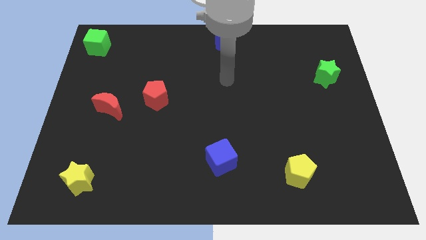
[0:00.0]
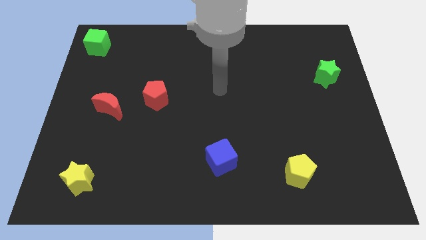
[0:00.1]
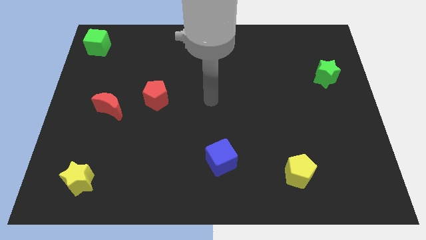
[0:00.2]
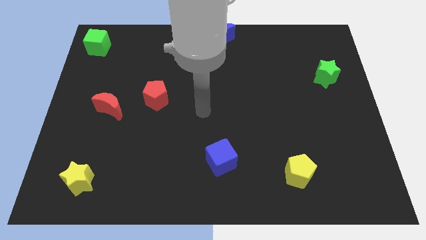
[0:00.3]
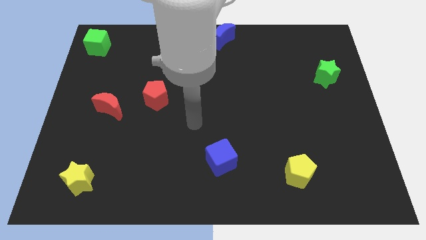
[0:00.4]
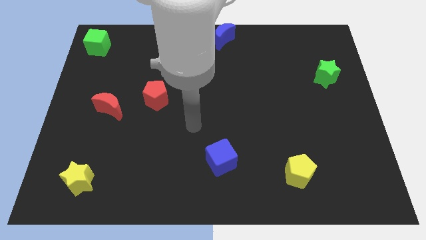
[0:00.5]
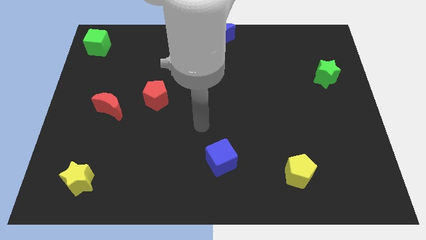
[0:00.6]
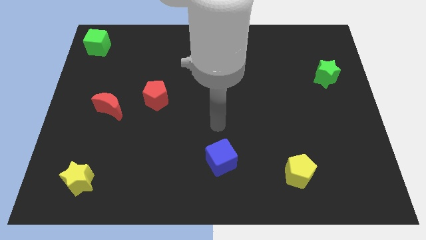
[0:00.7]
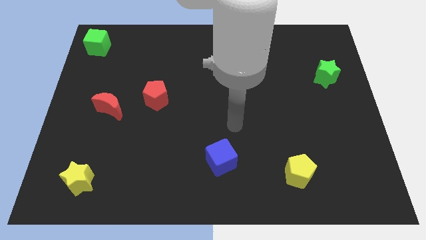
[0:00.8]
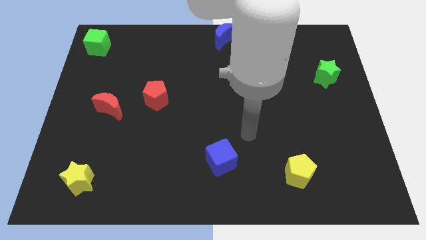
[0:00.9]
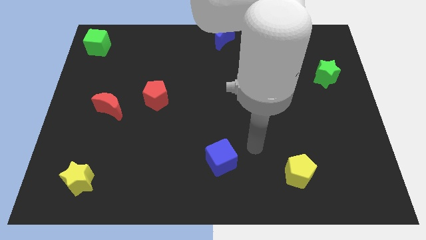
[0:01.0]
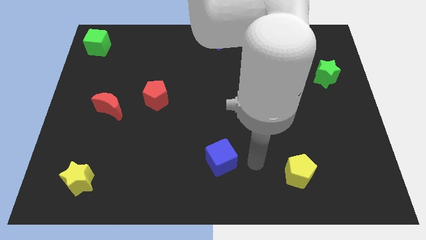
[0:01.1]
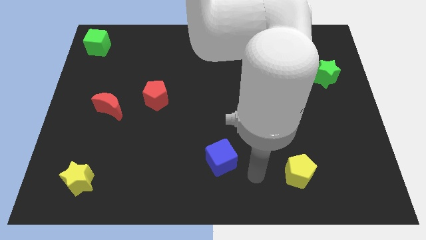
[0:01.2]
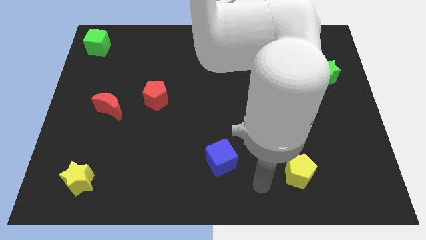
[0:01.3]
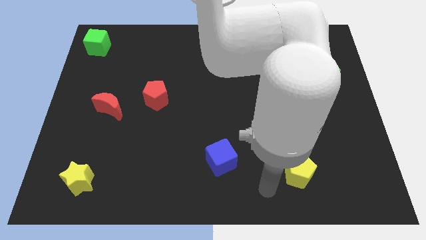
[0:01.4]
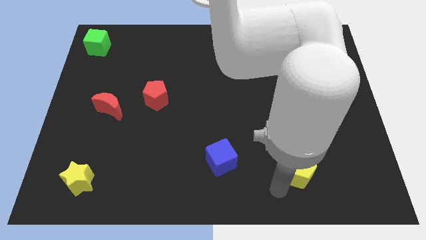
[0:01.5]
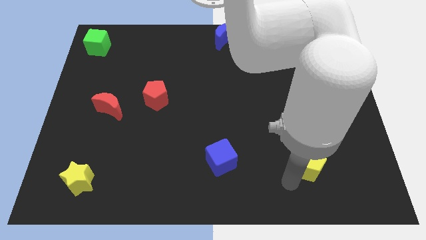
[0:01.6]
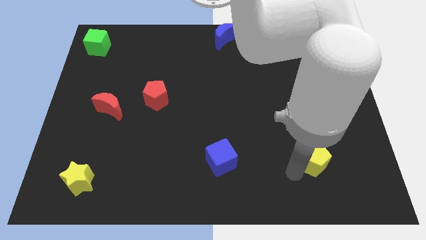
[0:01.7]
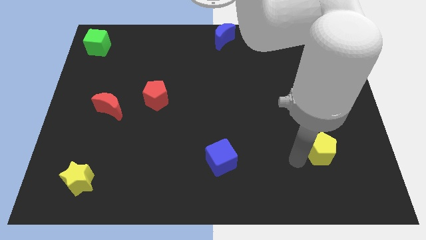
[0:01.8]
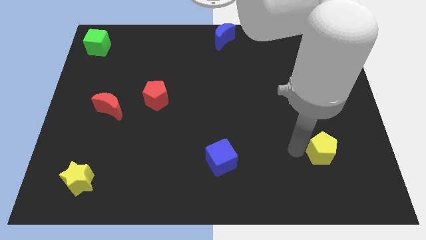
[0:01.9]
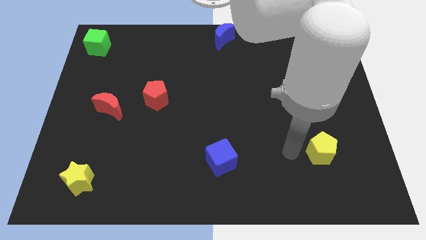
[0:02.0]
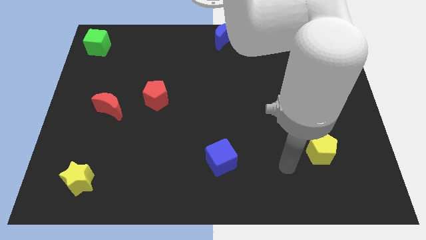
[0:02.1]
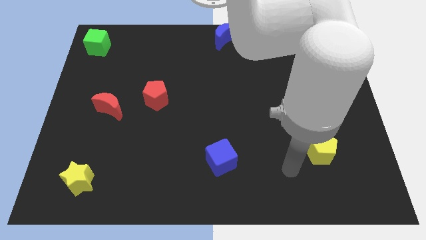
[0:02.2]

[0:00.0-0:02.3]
move yellow pentagon slightly upwards

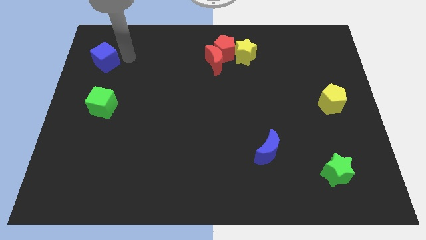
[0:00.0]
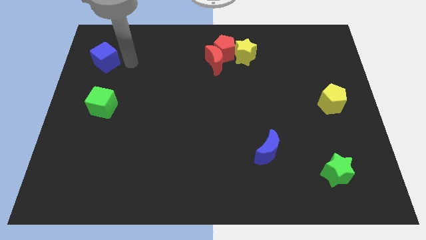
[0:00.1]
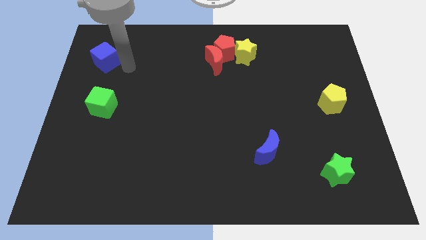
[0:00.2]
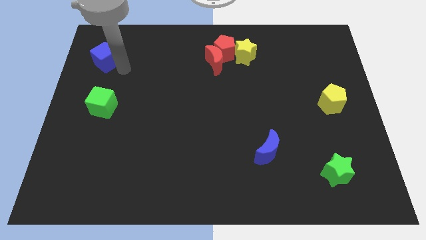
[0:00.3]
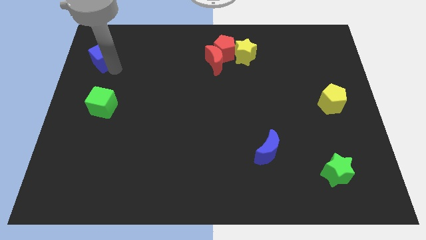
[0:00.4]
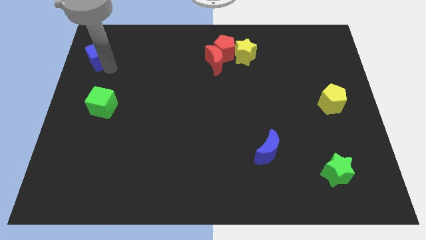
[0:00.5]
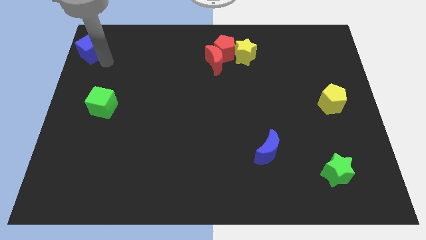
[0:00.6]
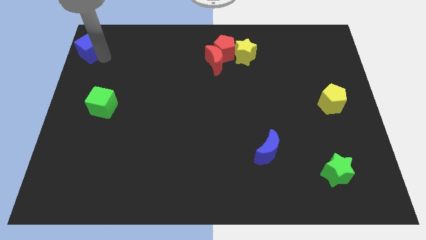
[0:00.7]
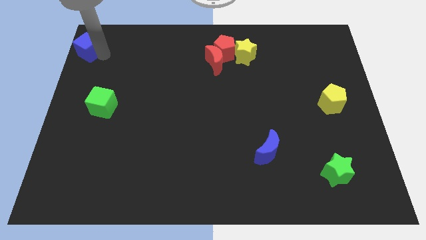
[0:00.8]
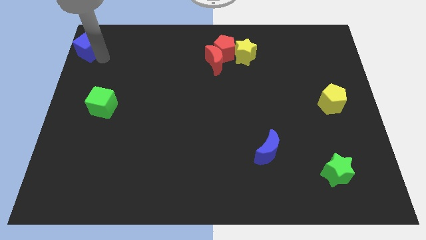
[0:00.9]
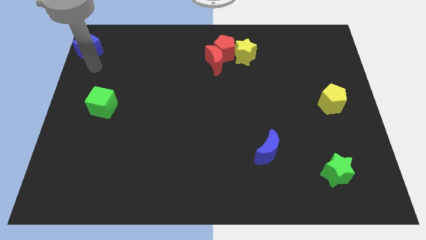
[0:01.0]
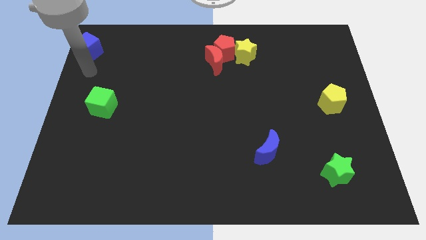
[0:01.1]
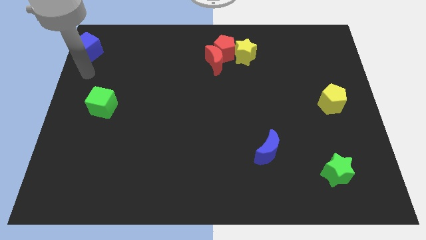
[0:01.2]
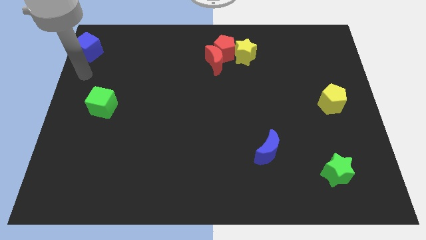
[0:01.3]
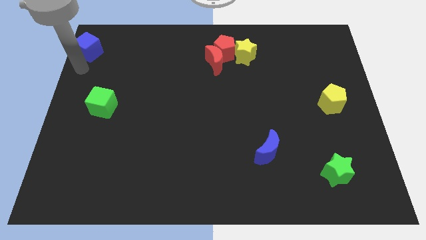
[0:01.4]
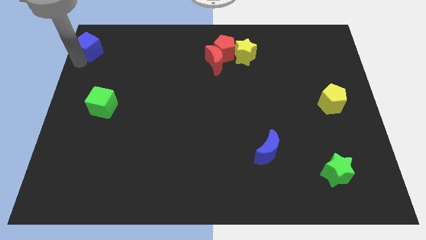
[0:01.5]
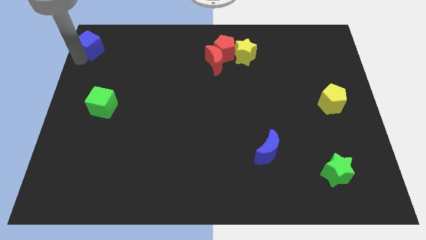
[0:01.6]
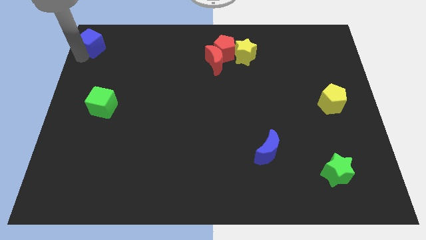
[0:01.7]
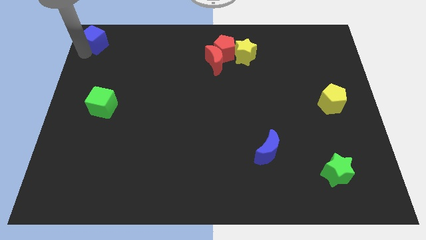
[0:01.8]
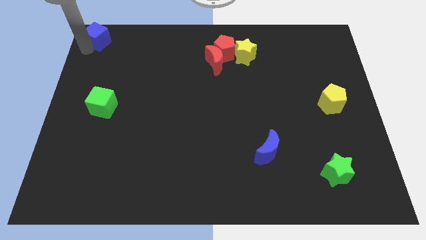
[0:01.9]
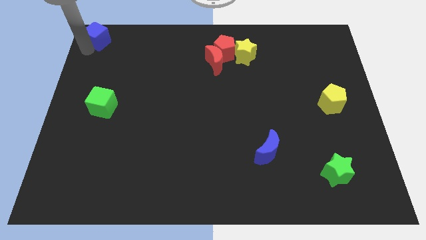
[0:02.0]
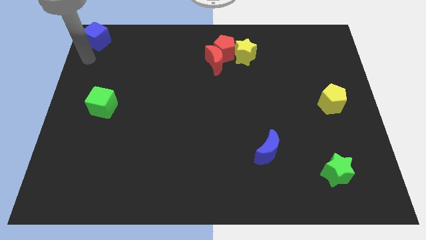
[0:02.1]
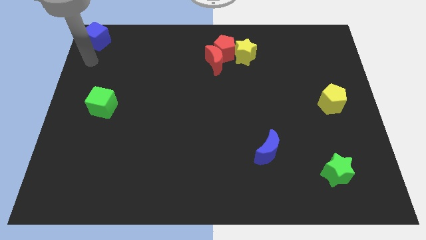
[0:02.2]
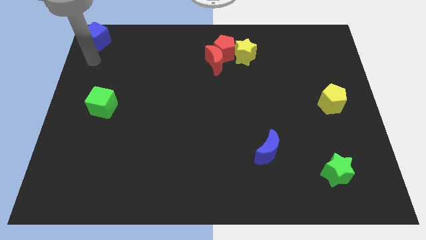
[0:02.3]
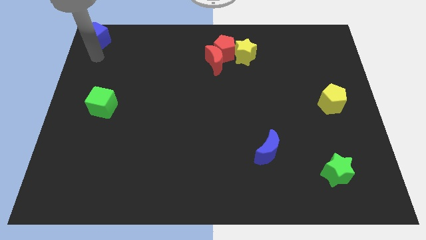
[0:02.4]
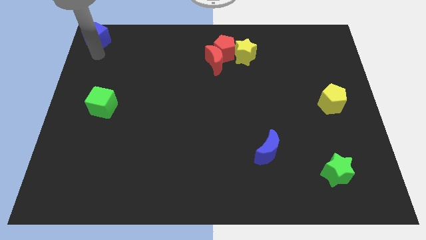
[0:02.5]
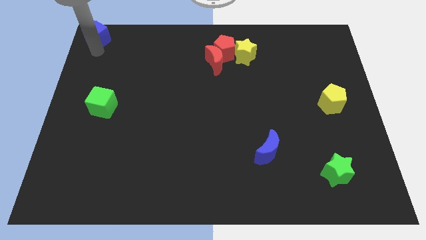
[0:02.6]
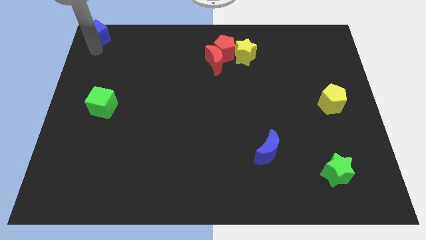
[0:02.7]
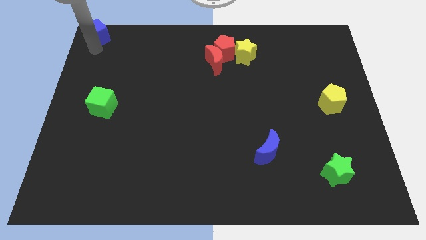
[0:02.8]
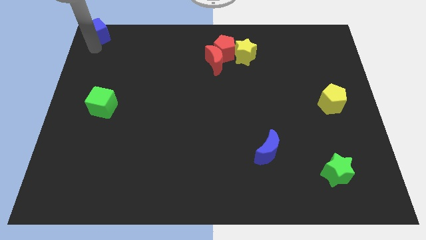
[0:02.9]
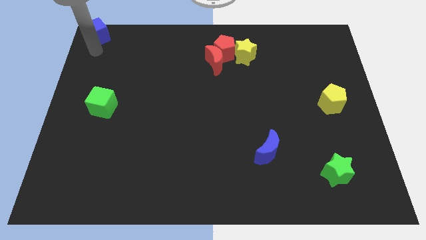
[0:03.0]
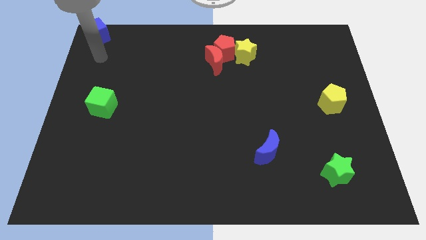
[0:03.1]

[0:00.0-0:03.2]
slide the blue cube at the top left corner

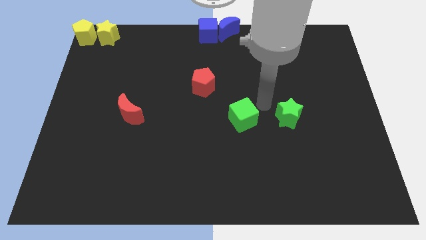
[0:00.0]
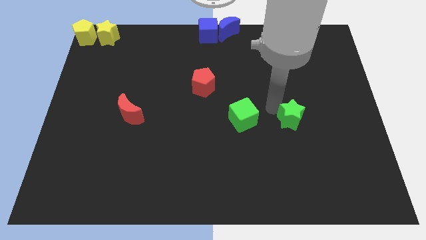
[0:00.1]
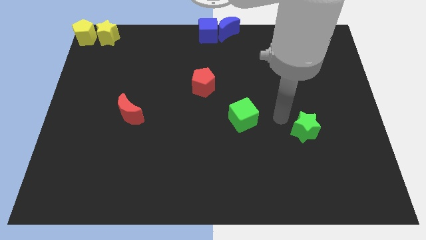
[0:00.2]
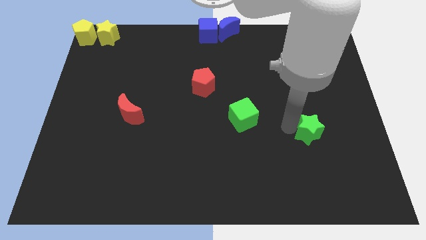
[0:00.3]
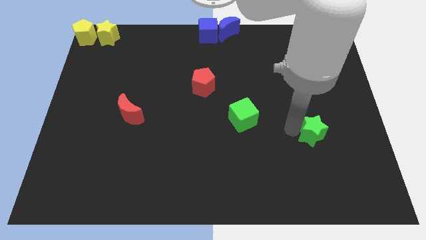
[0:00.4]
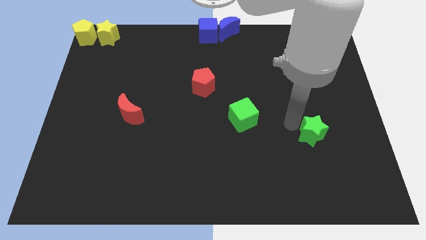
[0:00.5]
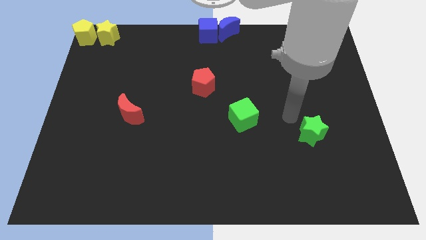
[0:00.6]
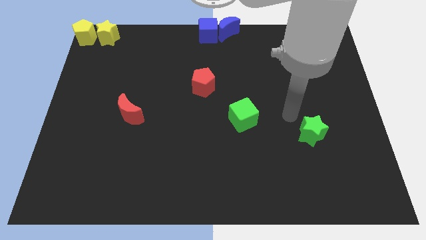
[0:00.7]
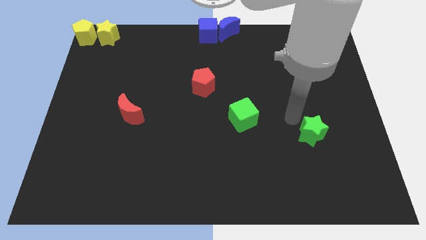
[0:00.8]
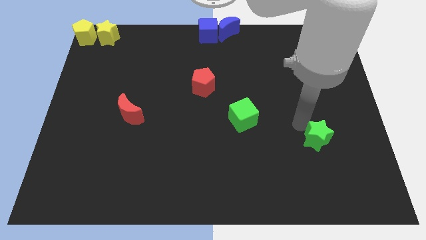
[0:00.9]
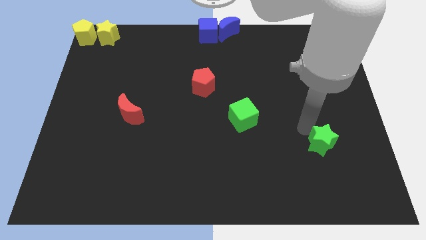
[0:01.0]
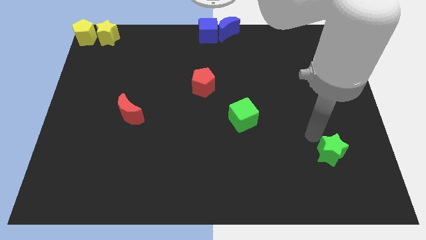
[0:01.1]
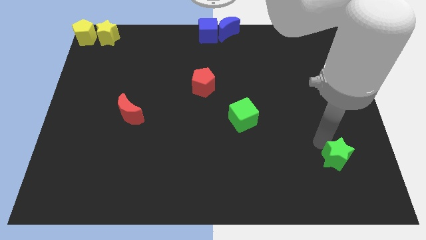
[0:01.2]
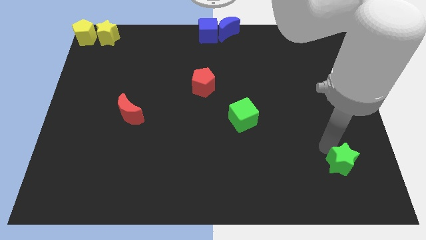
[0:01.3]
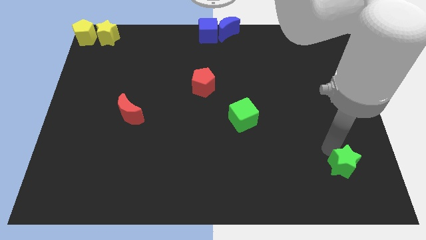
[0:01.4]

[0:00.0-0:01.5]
drag the green star towards the bottom right side of the board

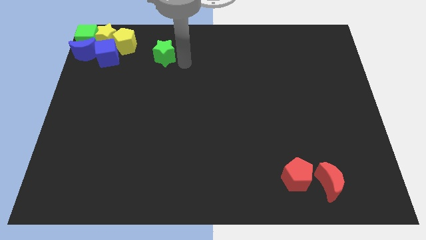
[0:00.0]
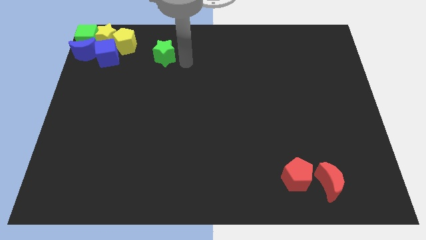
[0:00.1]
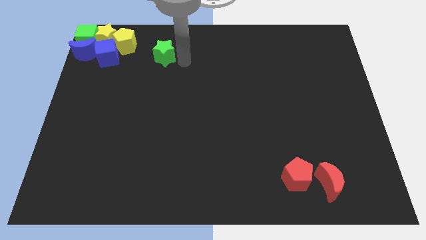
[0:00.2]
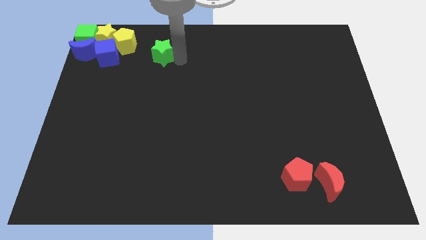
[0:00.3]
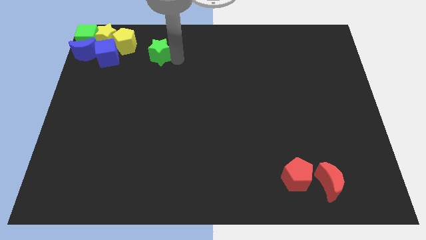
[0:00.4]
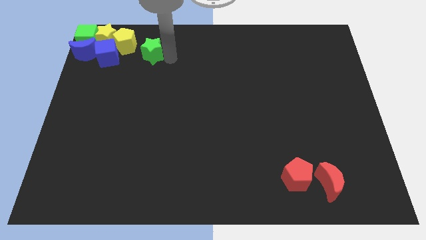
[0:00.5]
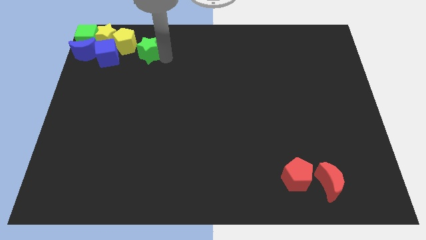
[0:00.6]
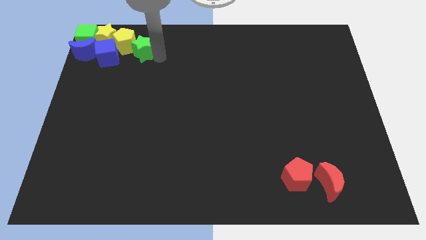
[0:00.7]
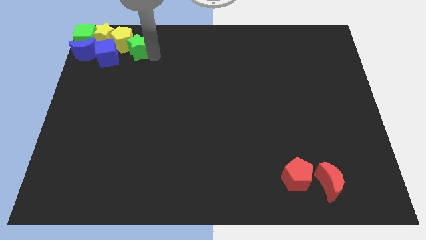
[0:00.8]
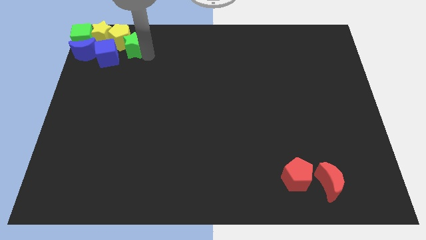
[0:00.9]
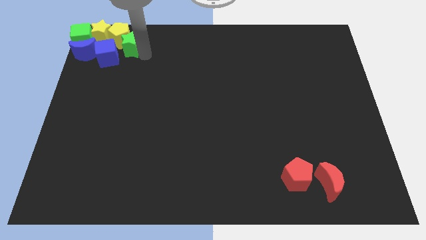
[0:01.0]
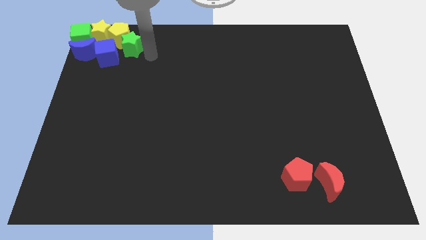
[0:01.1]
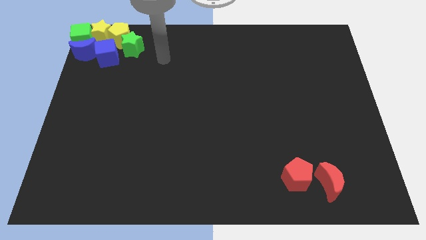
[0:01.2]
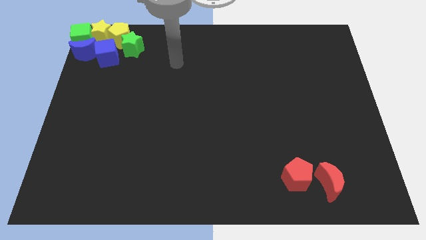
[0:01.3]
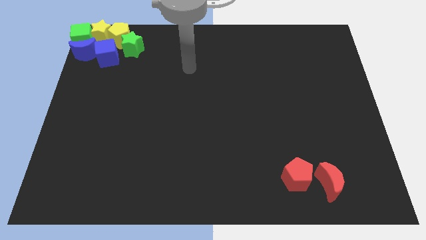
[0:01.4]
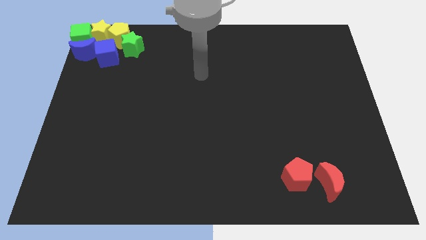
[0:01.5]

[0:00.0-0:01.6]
push the green star under the yellow pentagon

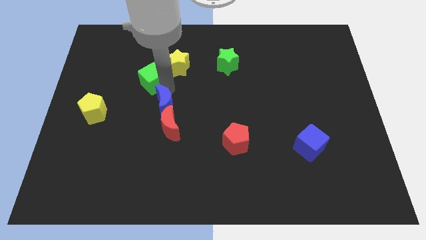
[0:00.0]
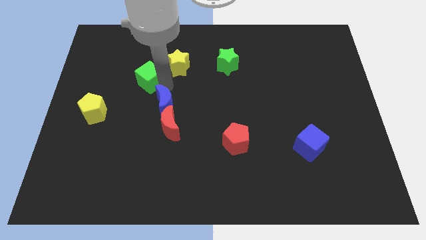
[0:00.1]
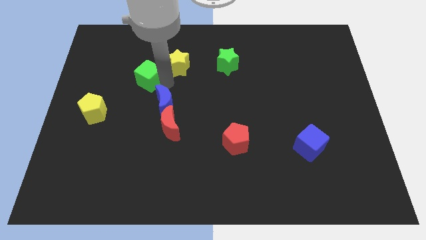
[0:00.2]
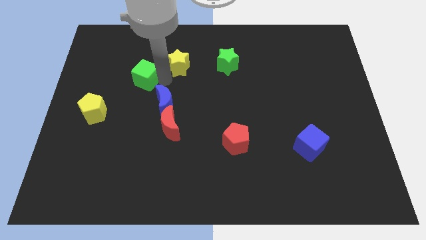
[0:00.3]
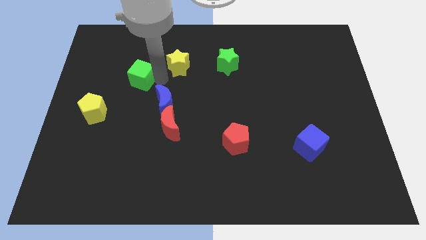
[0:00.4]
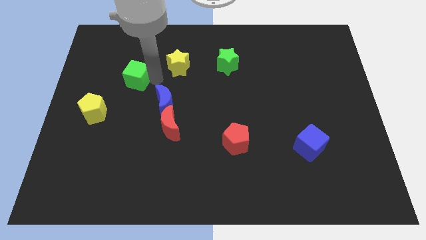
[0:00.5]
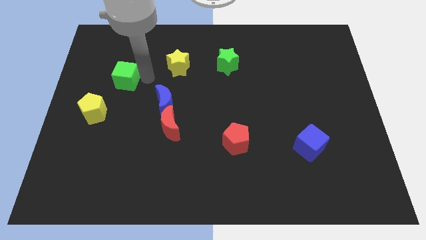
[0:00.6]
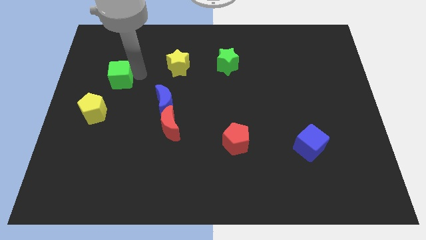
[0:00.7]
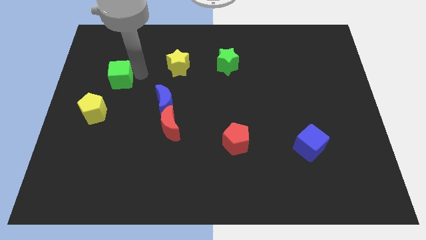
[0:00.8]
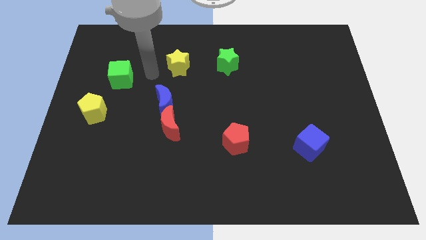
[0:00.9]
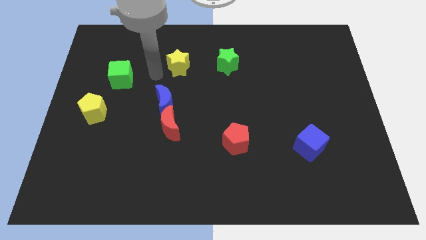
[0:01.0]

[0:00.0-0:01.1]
separate green cube from blue moon
